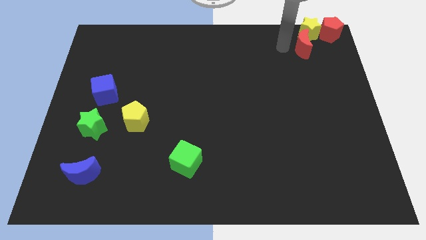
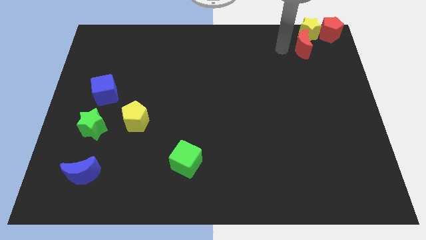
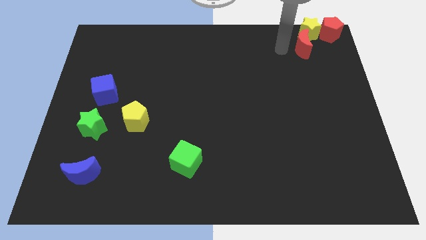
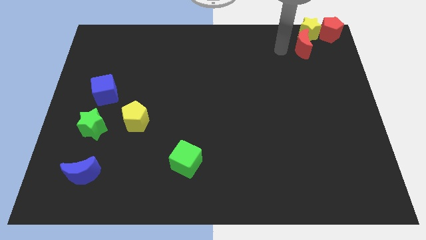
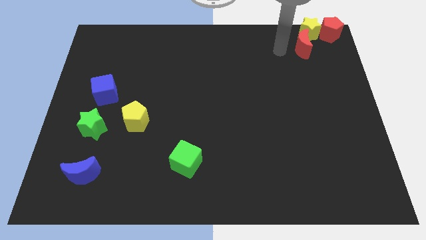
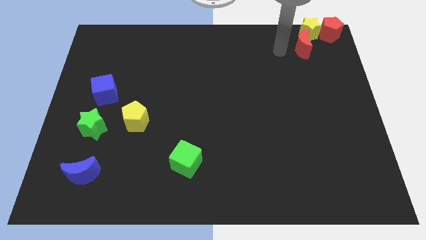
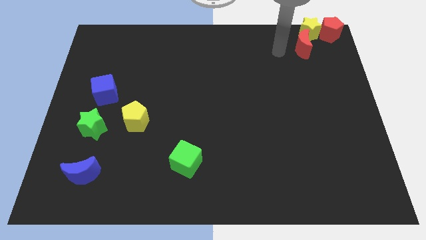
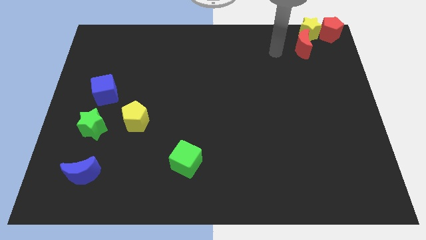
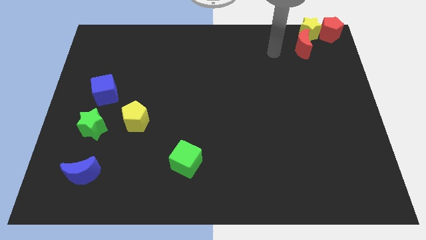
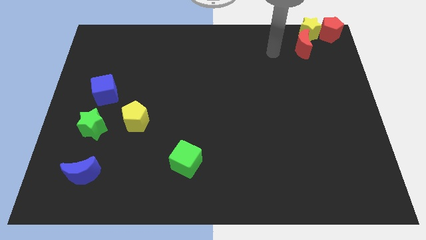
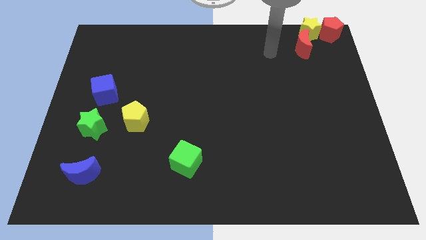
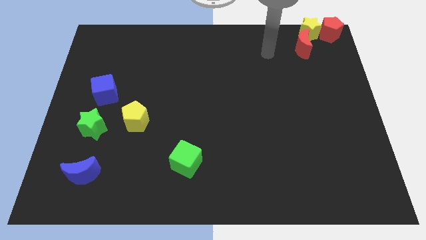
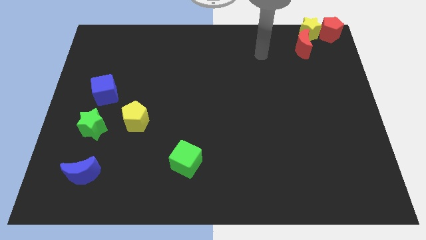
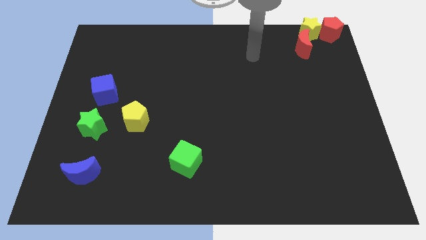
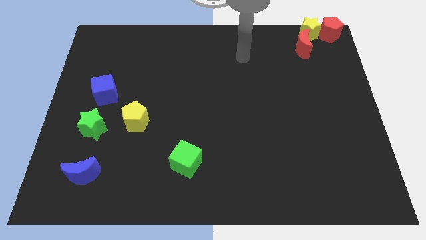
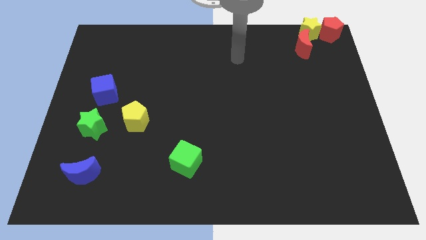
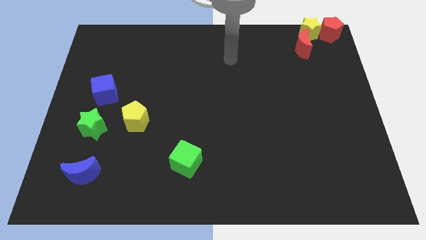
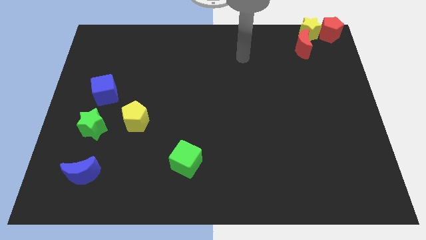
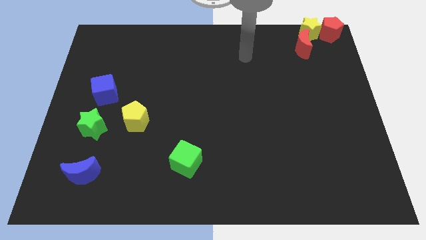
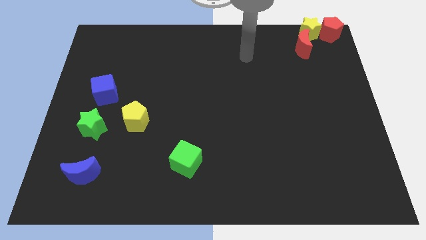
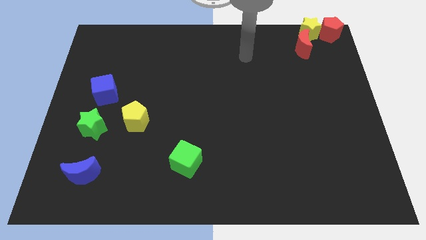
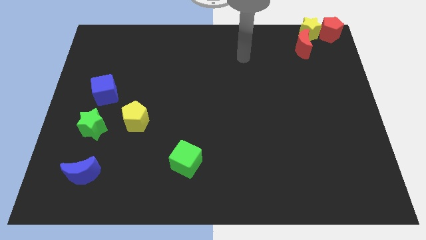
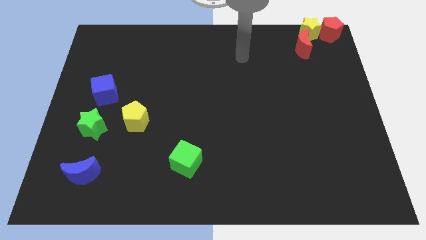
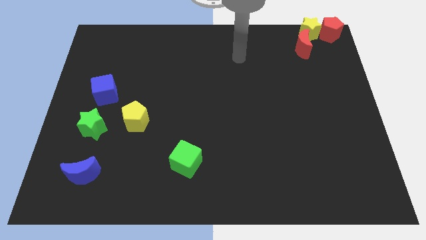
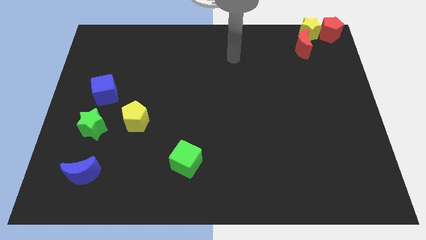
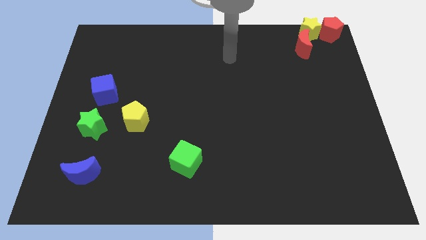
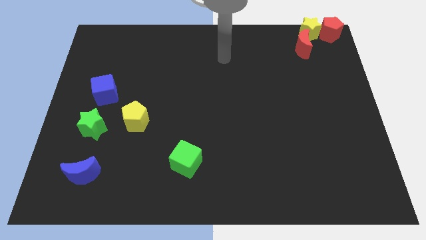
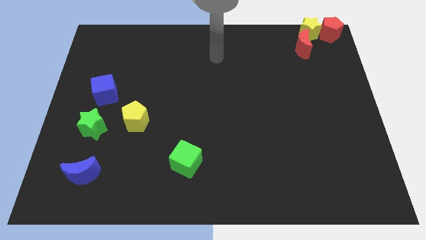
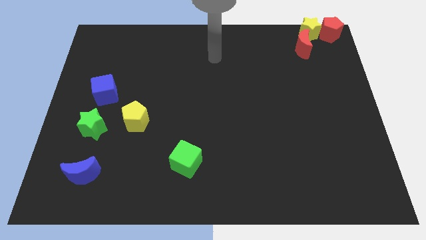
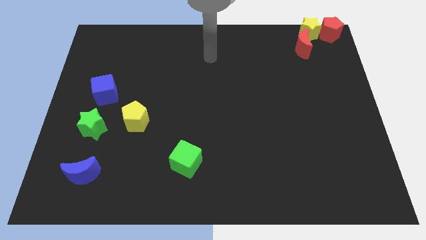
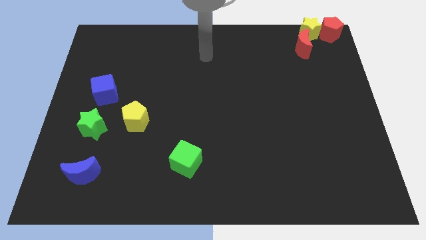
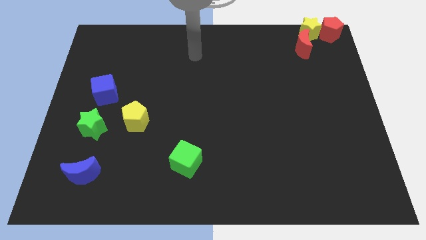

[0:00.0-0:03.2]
move the arm away from the red moon

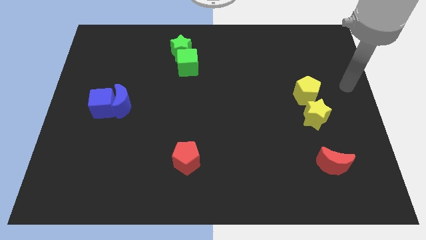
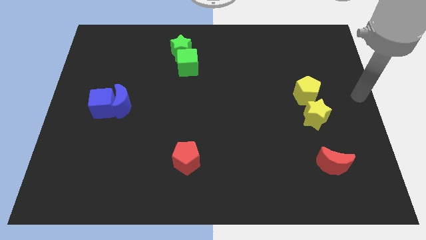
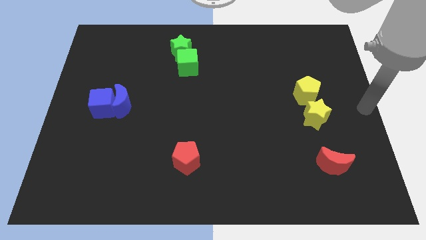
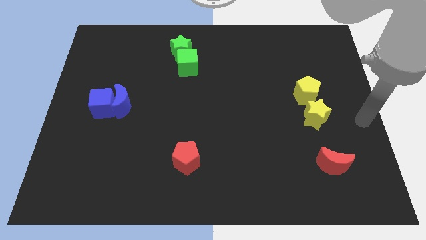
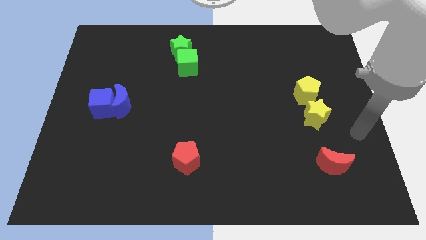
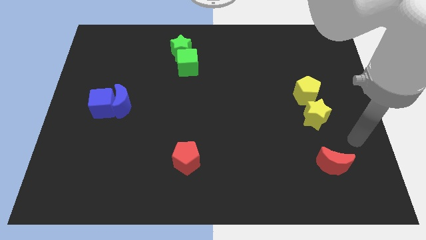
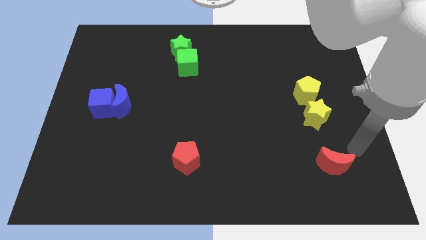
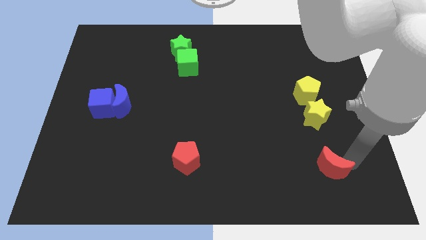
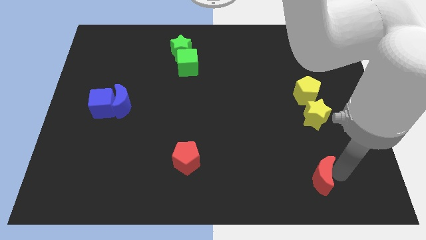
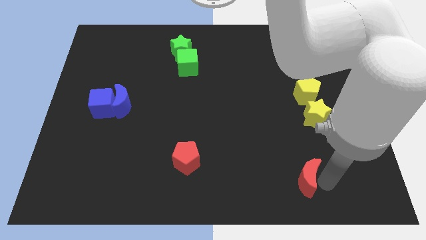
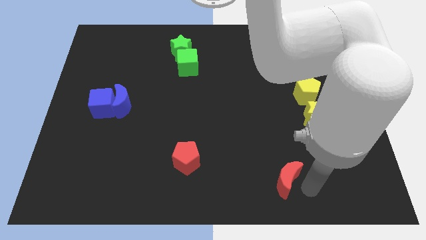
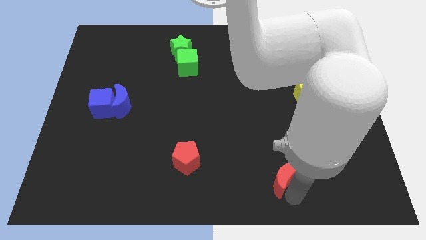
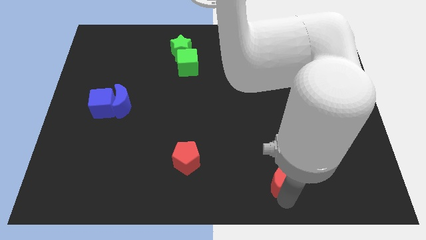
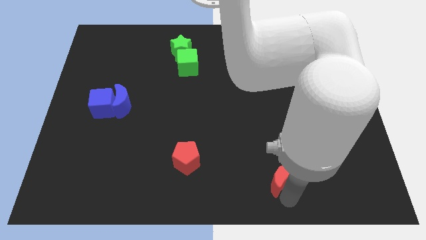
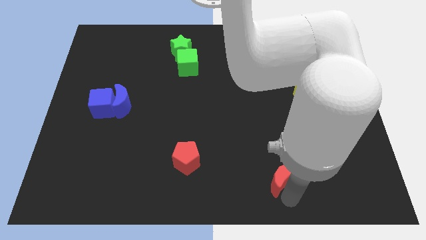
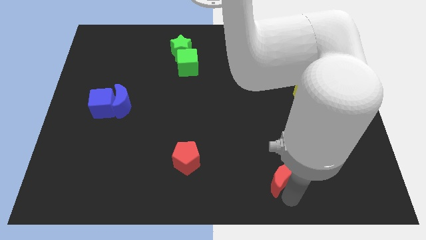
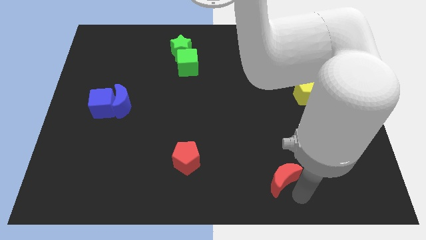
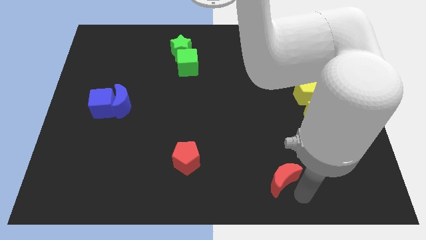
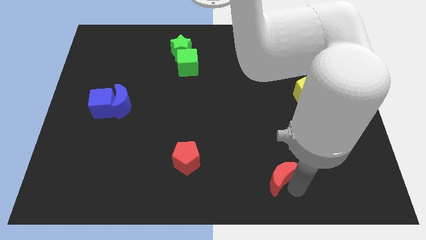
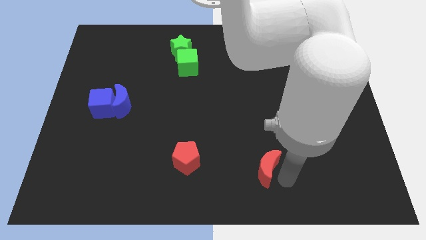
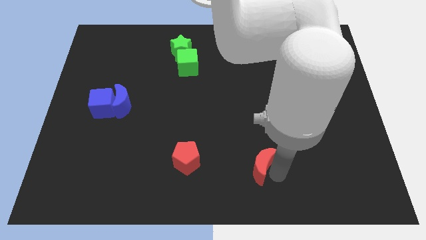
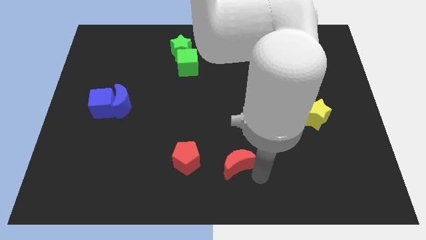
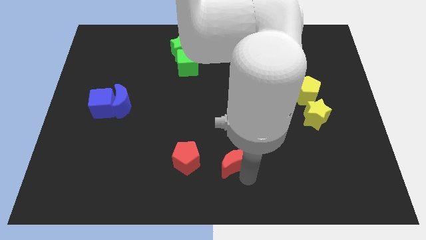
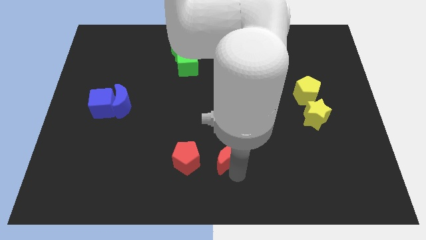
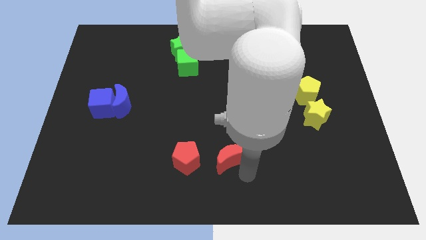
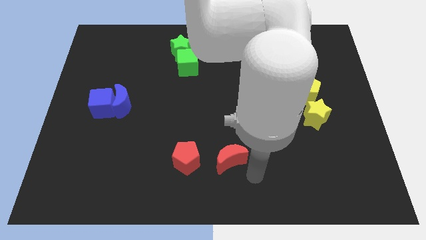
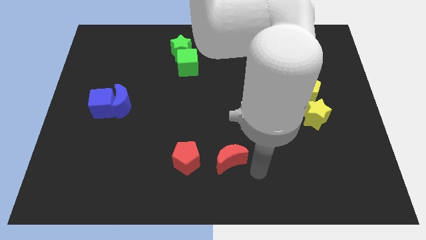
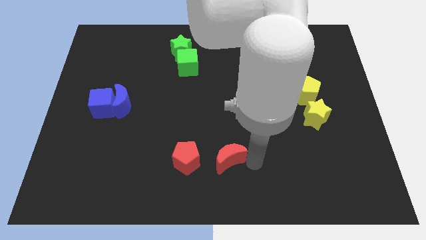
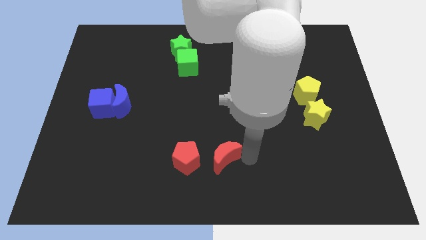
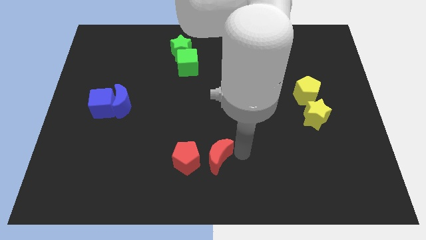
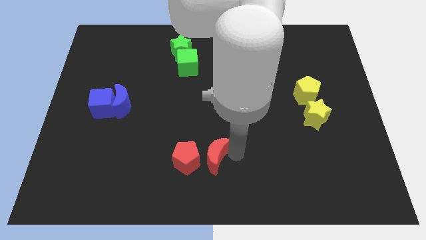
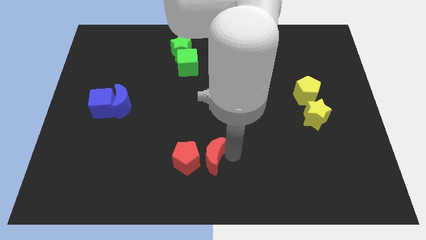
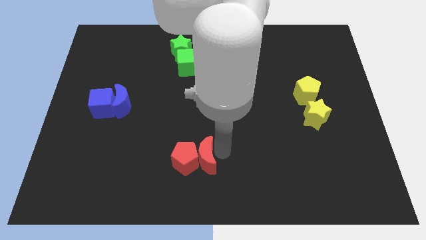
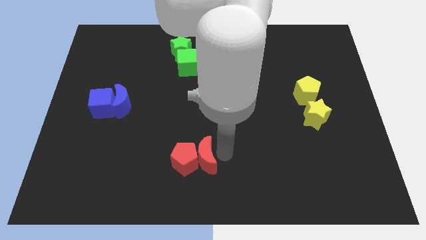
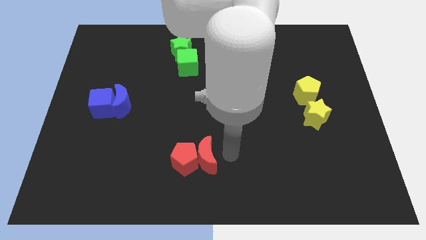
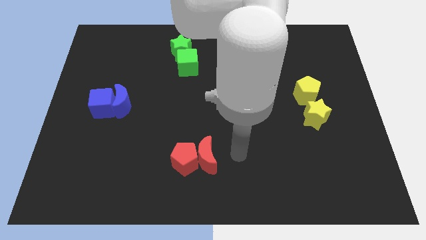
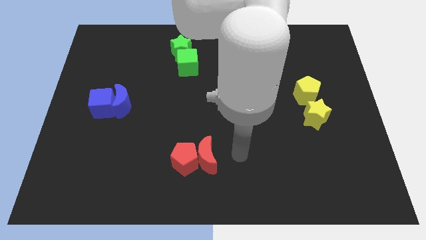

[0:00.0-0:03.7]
make a pair of blocks with red crescent and pentagon

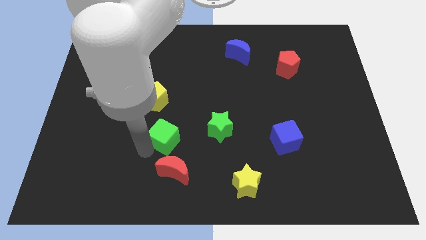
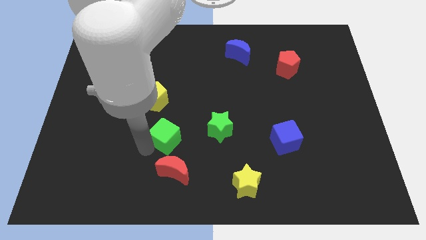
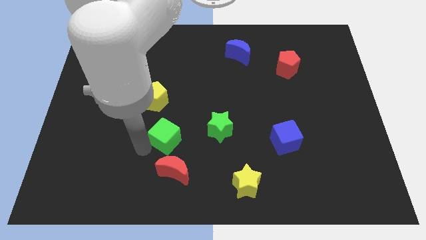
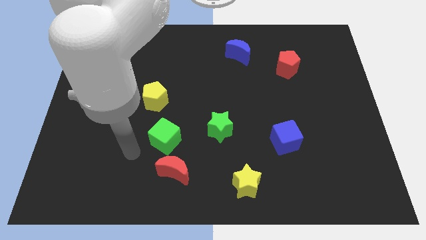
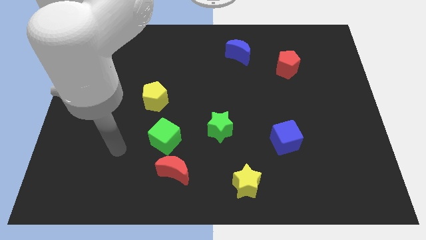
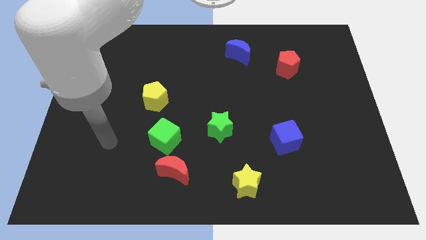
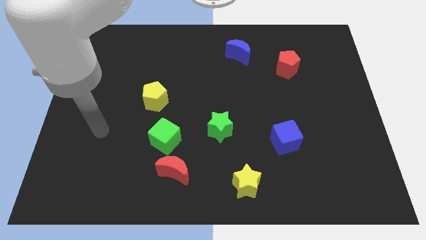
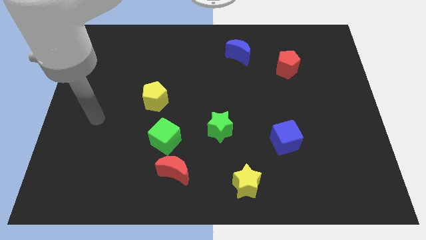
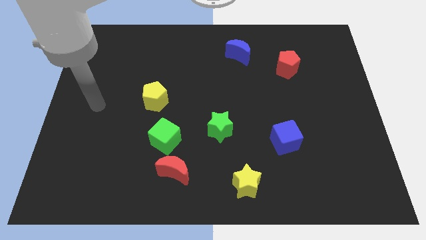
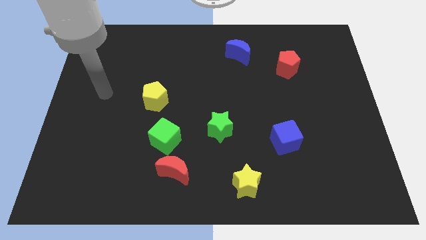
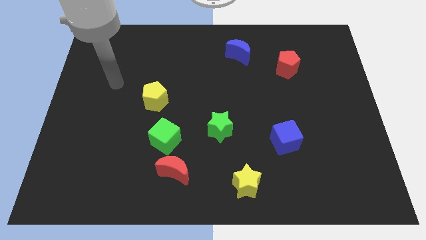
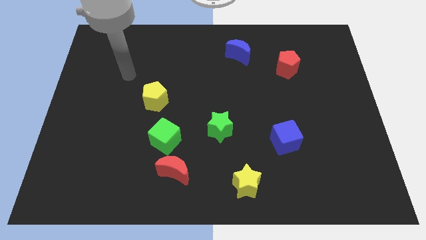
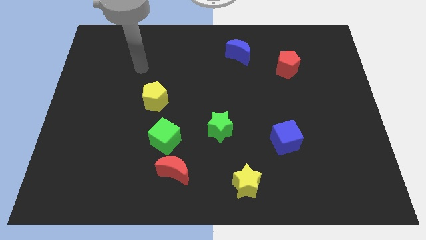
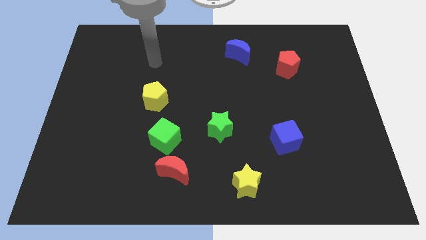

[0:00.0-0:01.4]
move your arm away from the green cube

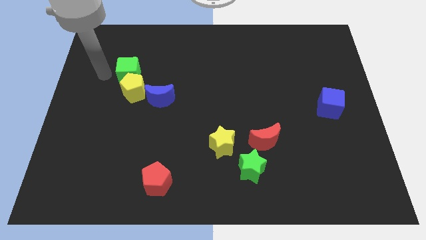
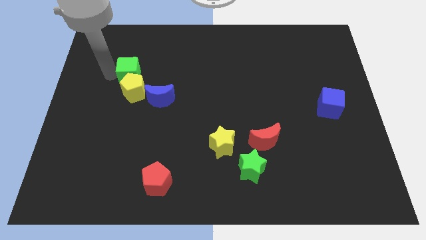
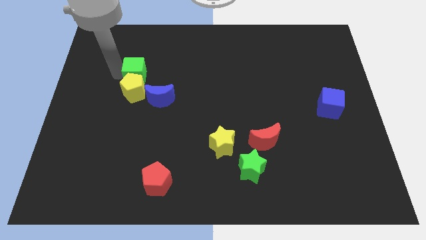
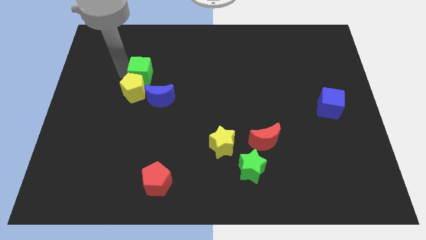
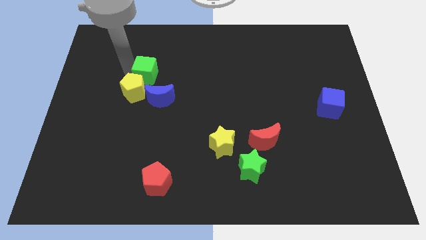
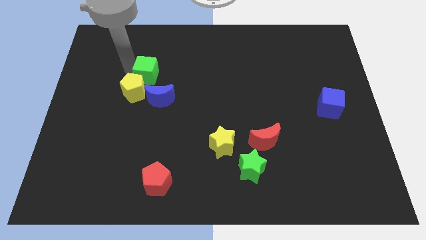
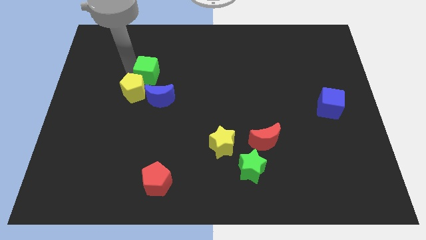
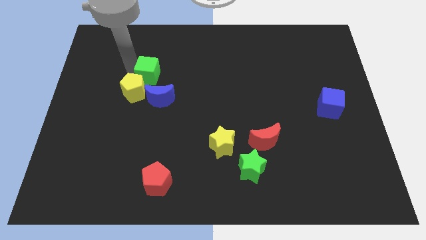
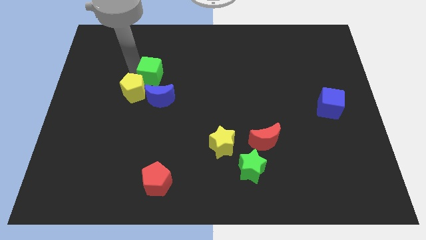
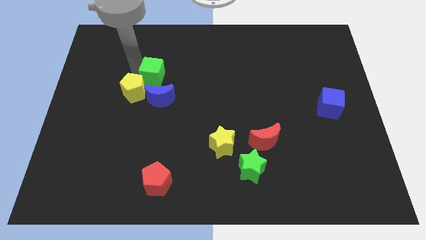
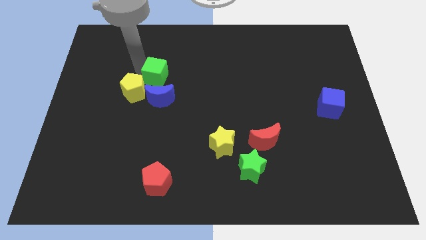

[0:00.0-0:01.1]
move the green cube slightly right side
